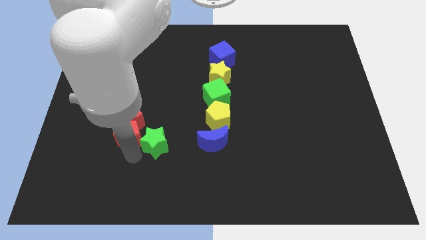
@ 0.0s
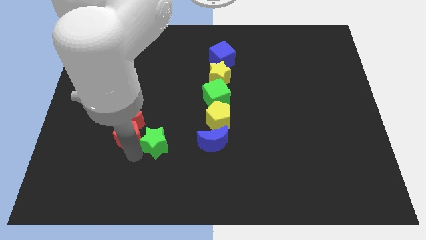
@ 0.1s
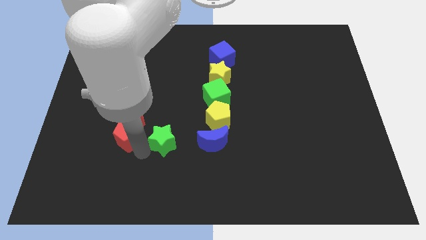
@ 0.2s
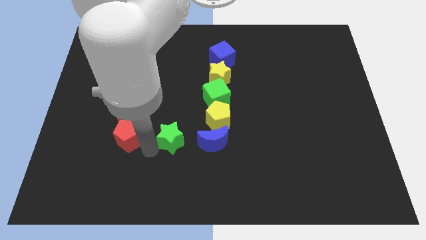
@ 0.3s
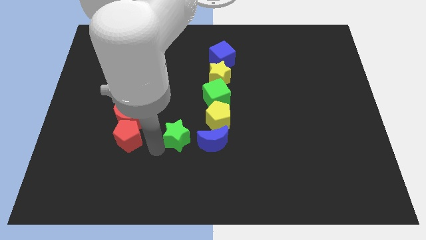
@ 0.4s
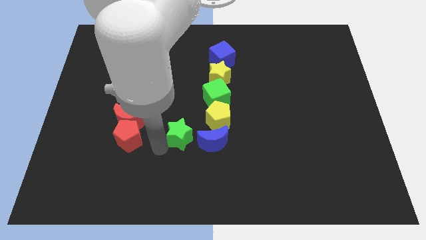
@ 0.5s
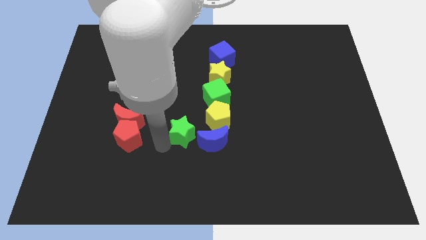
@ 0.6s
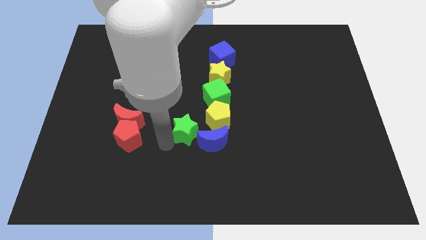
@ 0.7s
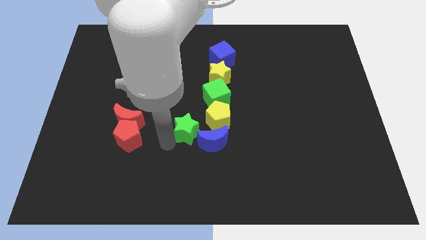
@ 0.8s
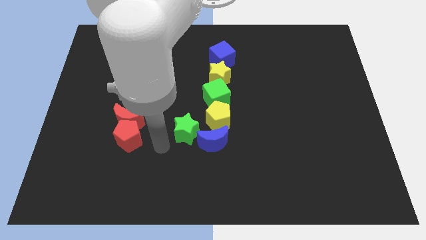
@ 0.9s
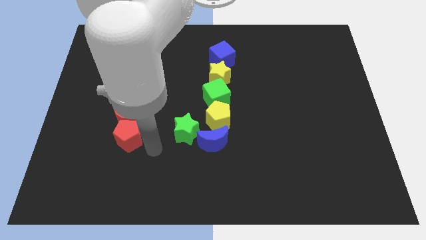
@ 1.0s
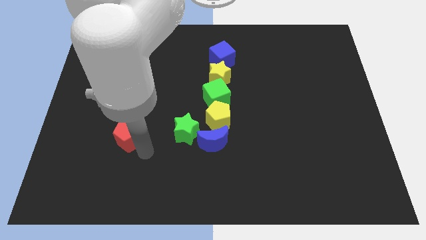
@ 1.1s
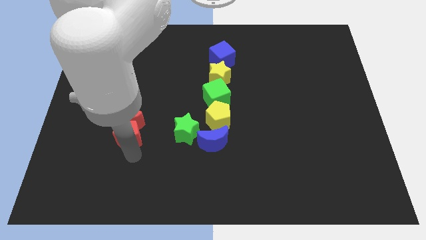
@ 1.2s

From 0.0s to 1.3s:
push the green star towards the blue crescent

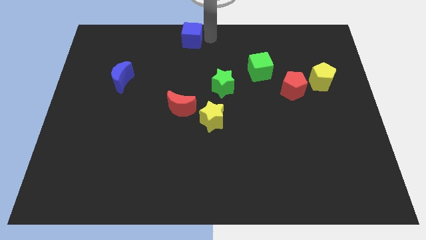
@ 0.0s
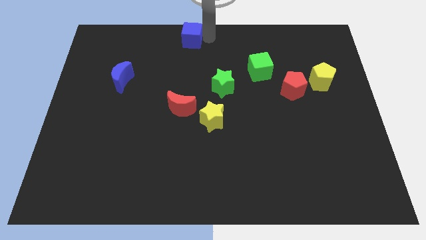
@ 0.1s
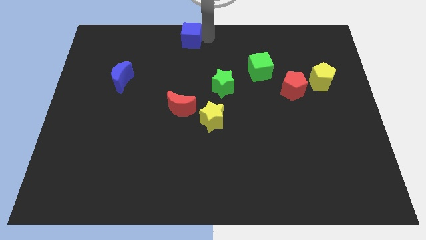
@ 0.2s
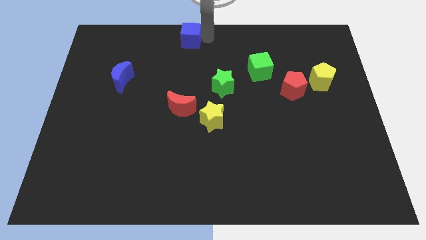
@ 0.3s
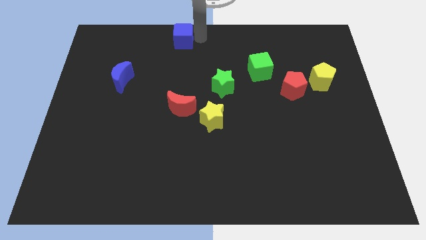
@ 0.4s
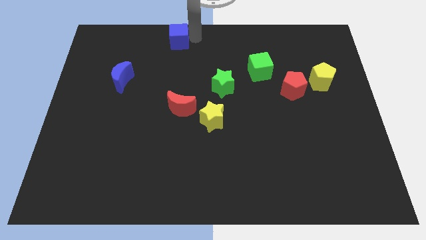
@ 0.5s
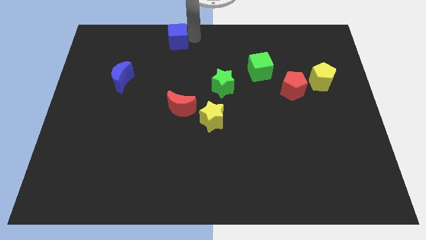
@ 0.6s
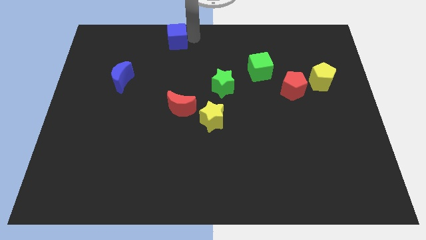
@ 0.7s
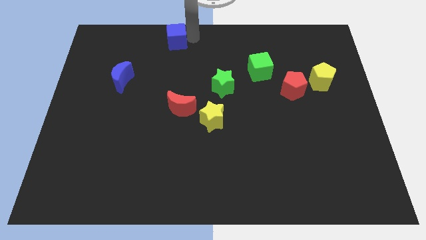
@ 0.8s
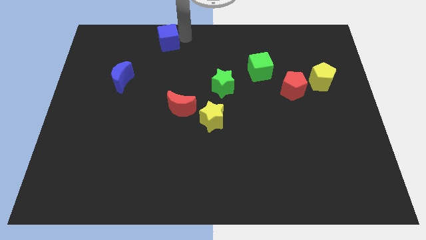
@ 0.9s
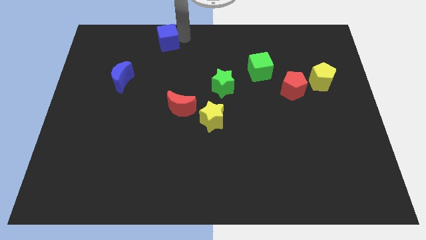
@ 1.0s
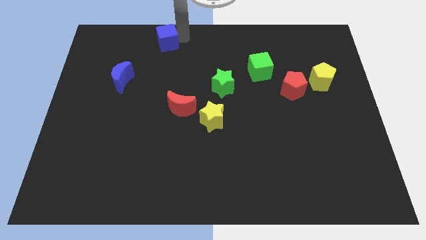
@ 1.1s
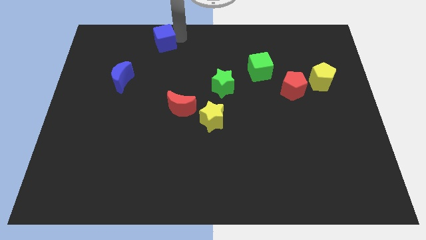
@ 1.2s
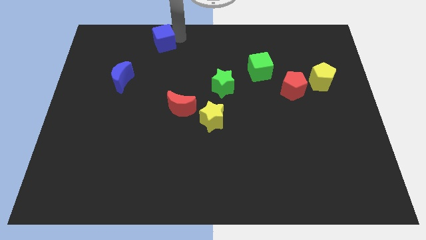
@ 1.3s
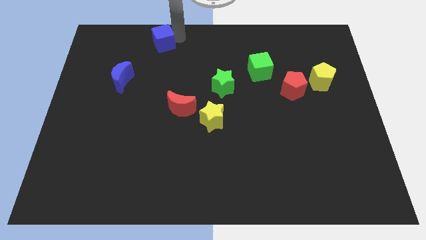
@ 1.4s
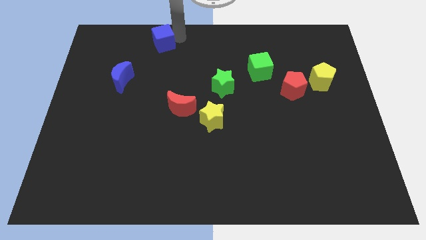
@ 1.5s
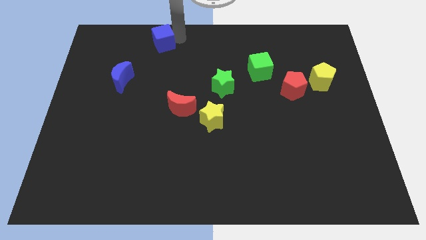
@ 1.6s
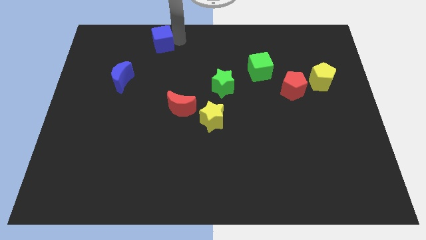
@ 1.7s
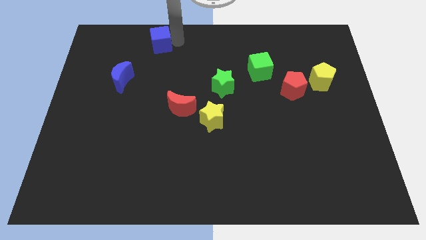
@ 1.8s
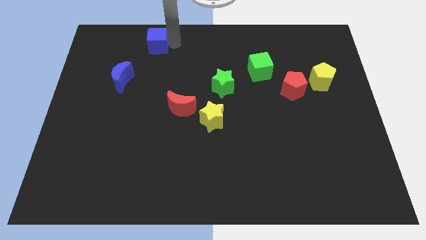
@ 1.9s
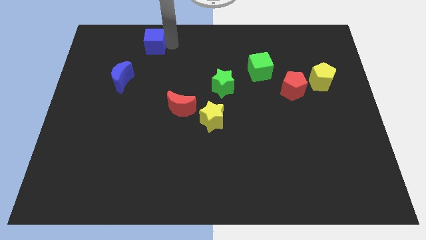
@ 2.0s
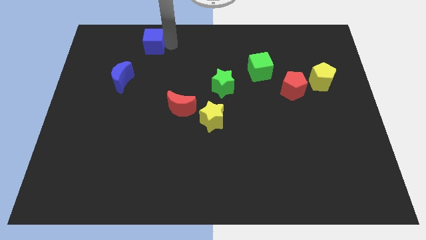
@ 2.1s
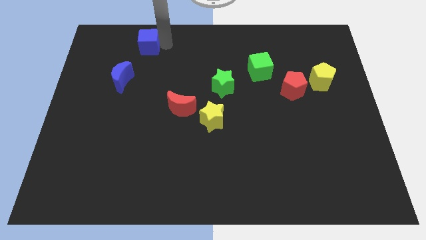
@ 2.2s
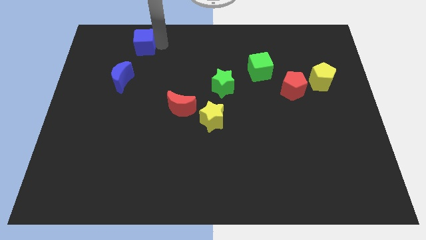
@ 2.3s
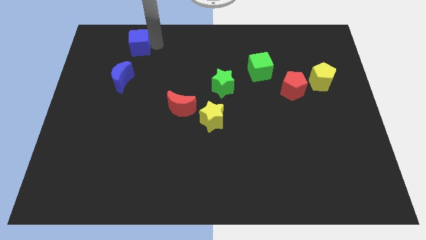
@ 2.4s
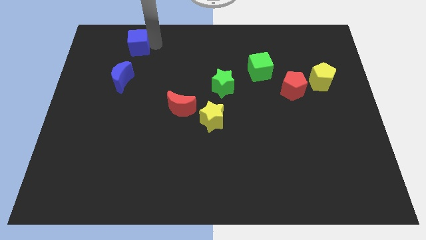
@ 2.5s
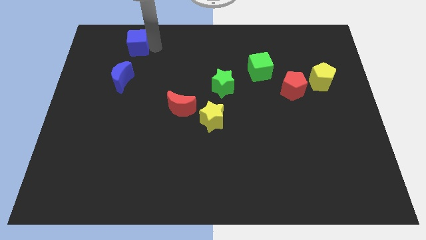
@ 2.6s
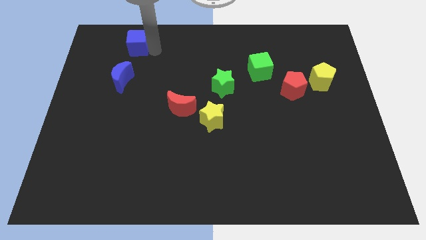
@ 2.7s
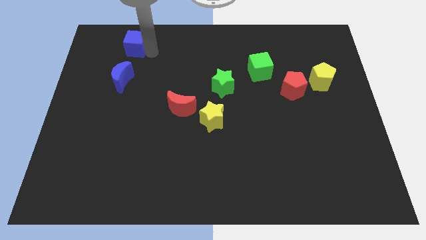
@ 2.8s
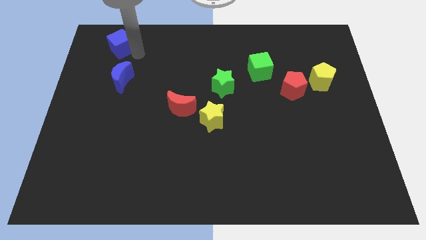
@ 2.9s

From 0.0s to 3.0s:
place the blue cube above the blue crescent

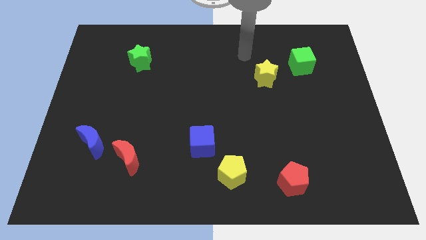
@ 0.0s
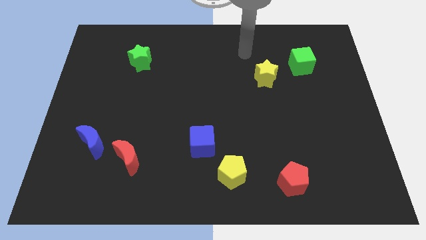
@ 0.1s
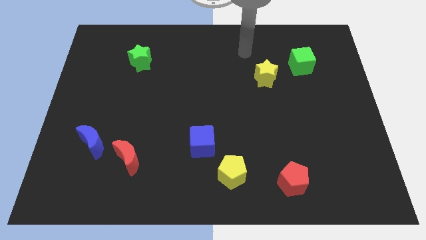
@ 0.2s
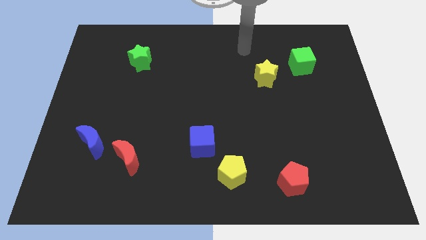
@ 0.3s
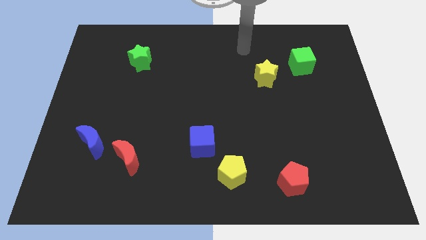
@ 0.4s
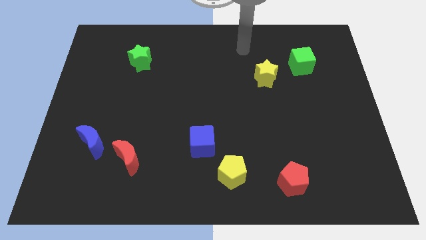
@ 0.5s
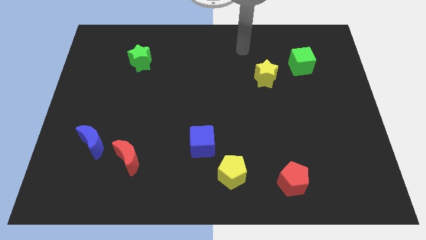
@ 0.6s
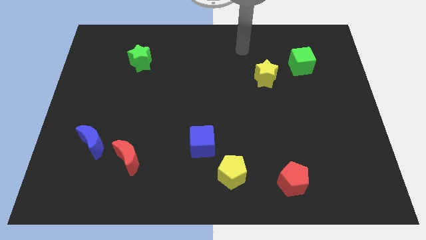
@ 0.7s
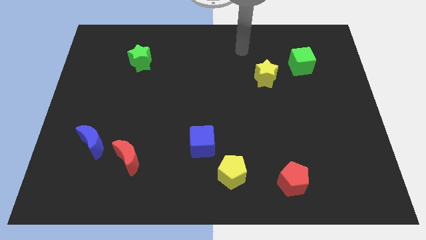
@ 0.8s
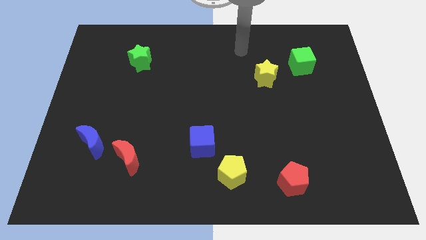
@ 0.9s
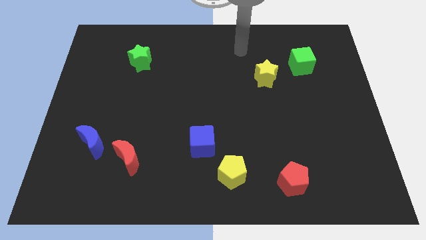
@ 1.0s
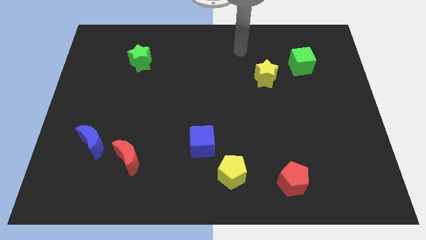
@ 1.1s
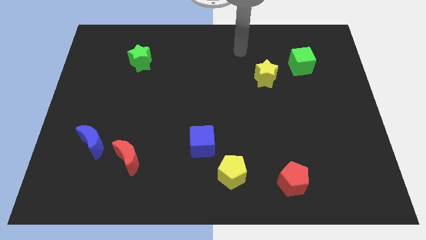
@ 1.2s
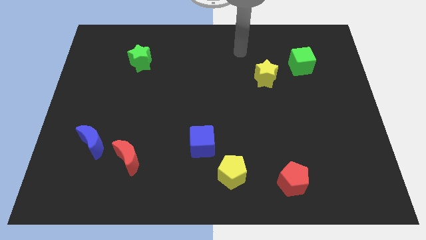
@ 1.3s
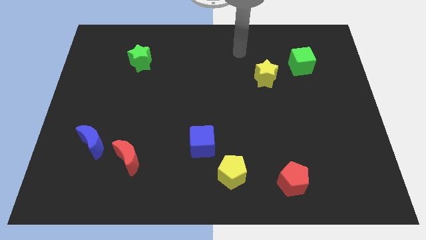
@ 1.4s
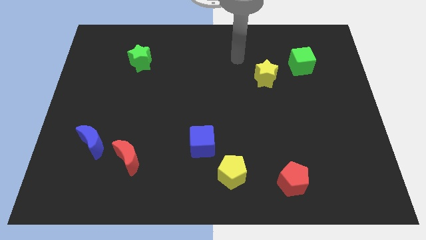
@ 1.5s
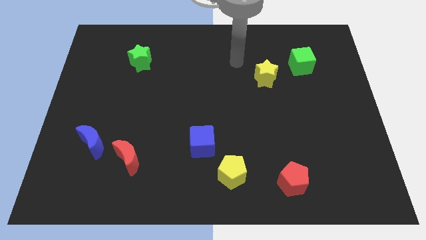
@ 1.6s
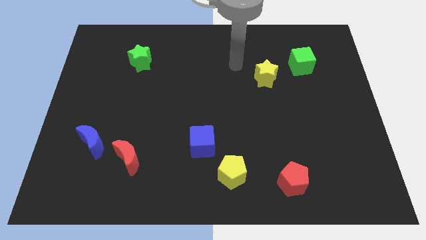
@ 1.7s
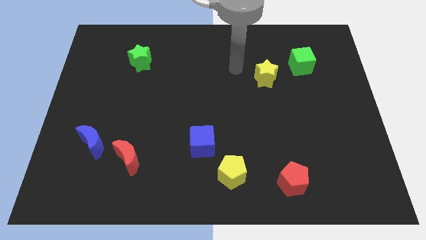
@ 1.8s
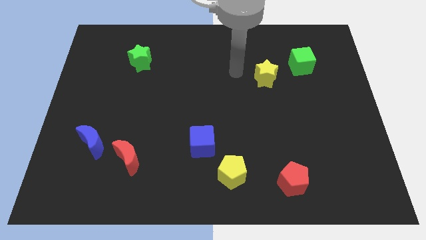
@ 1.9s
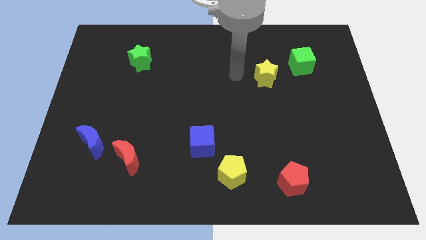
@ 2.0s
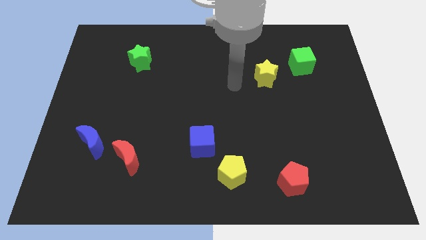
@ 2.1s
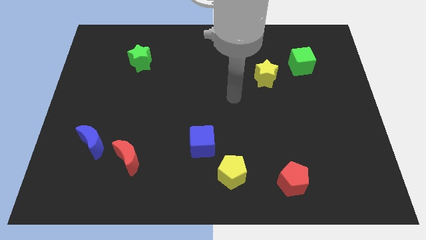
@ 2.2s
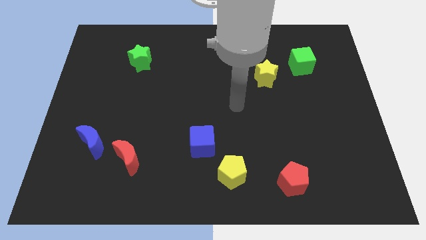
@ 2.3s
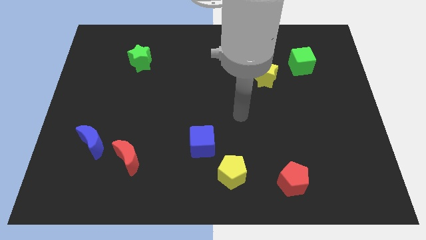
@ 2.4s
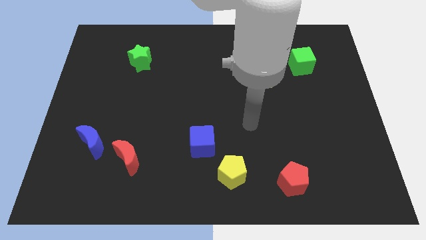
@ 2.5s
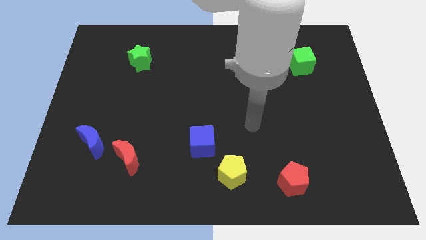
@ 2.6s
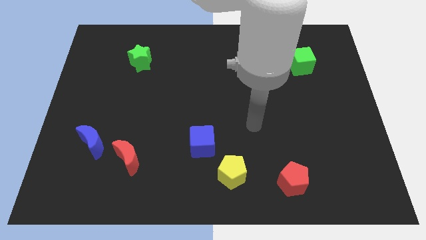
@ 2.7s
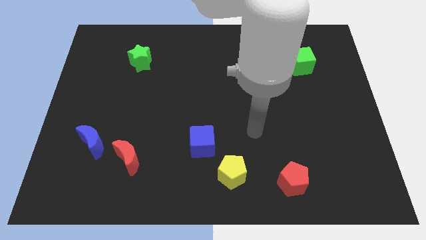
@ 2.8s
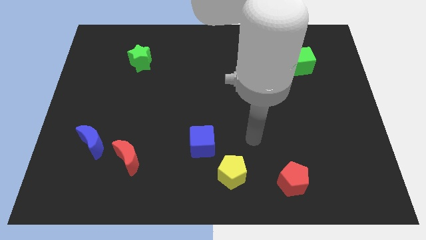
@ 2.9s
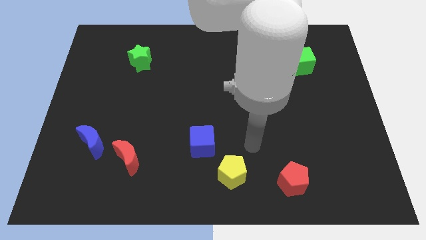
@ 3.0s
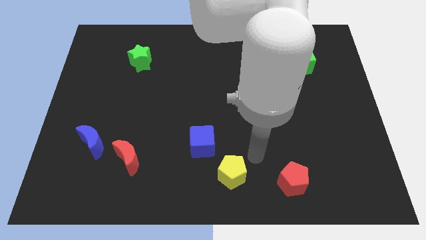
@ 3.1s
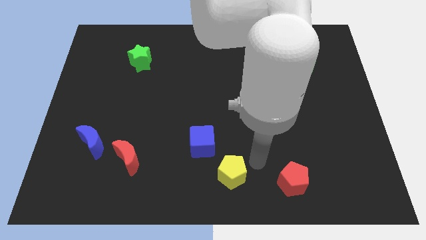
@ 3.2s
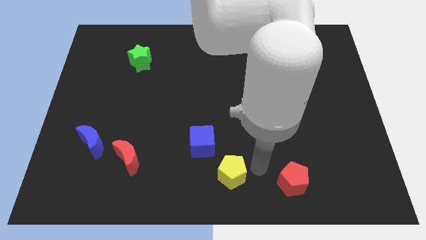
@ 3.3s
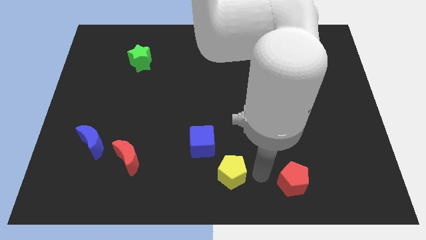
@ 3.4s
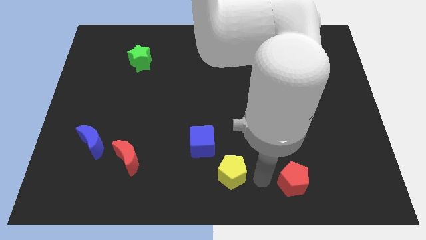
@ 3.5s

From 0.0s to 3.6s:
place your hand in between yellow pentagon and red pentagon

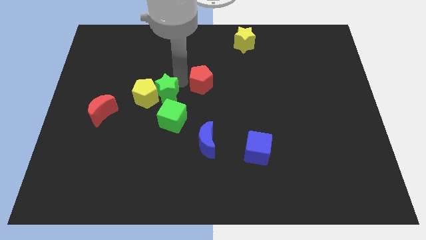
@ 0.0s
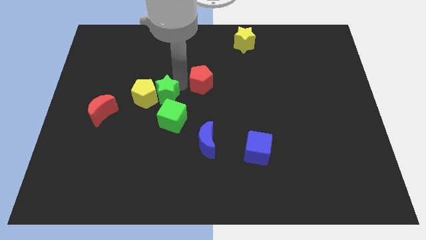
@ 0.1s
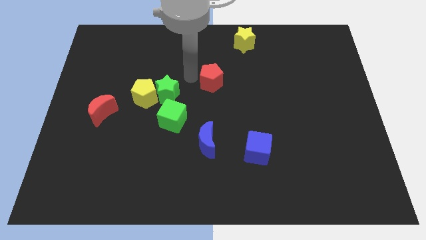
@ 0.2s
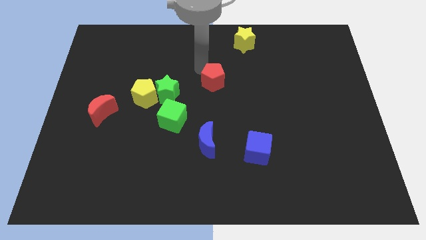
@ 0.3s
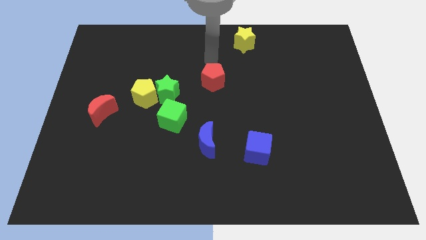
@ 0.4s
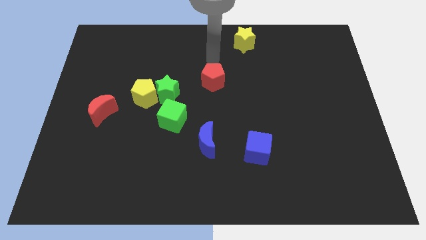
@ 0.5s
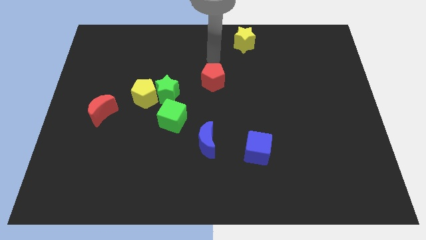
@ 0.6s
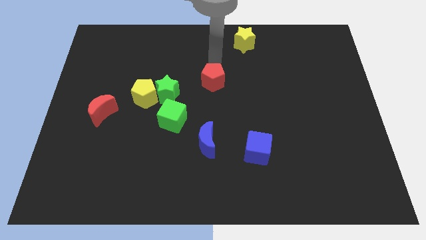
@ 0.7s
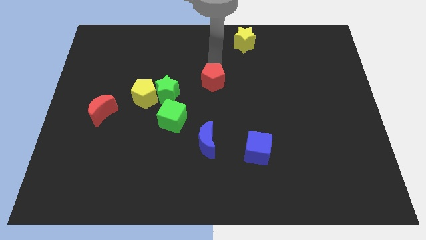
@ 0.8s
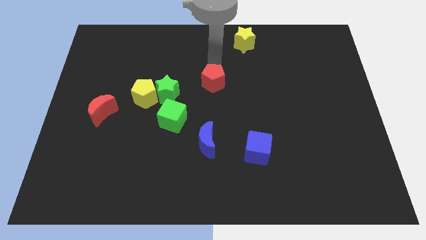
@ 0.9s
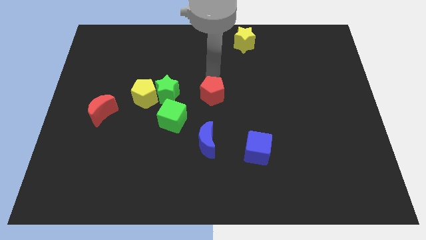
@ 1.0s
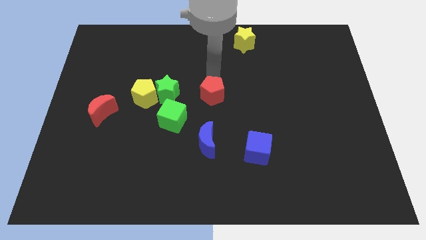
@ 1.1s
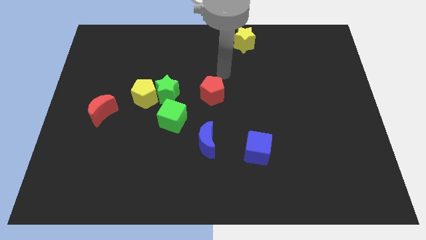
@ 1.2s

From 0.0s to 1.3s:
move the red pentagon towards the blue crescent
